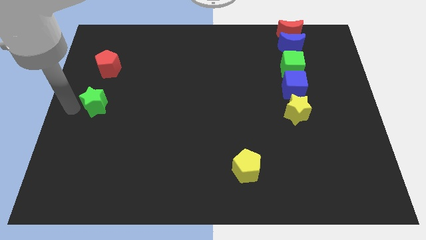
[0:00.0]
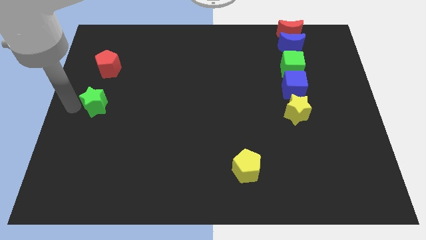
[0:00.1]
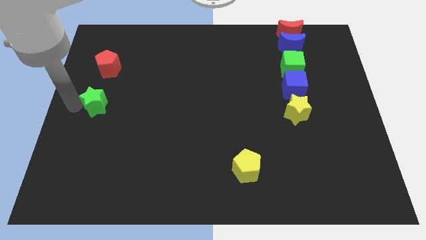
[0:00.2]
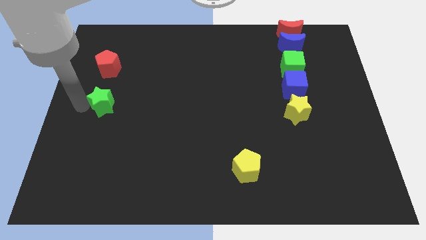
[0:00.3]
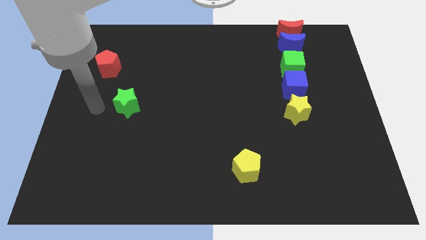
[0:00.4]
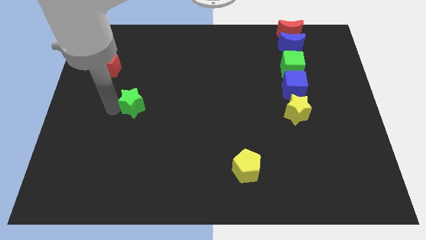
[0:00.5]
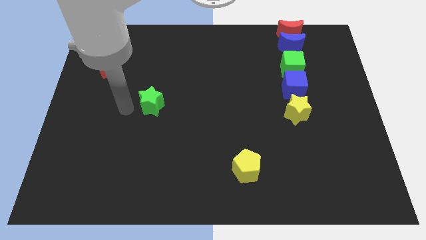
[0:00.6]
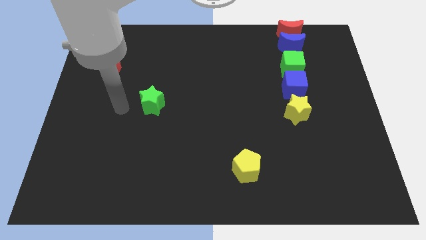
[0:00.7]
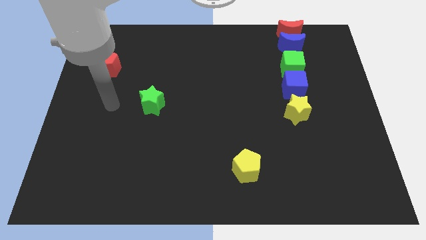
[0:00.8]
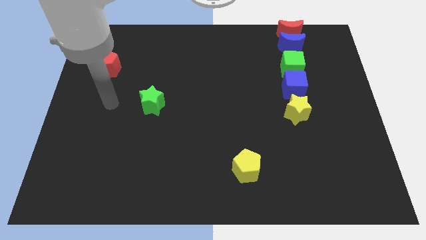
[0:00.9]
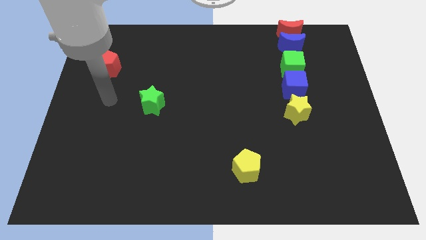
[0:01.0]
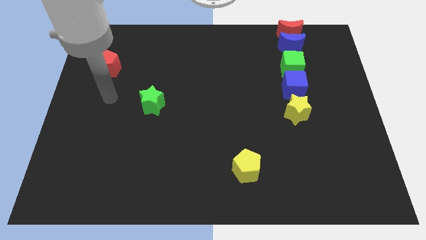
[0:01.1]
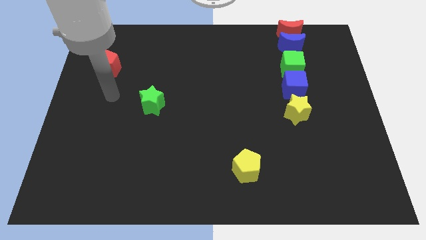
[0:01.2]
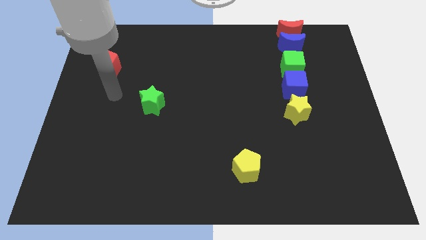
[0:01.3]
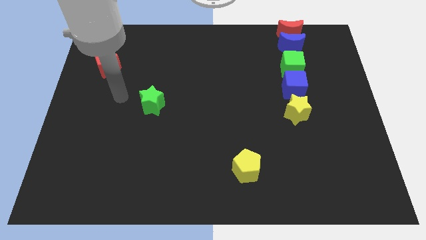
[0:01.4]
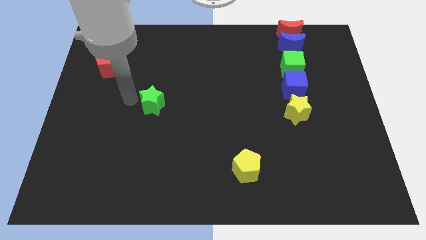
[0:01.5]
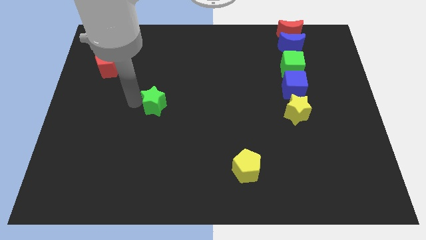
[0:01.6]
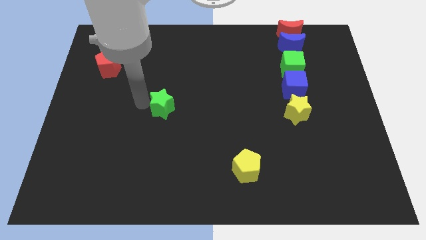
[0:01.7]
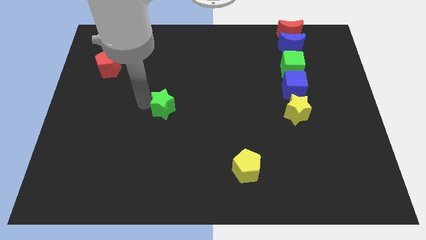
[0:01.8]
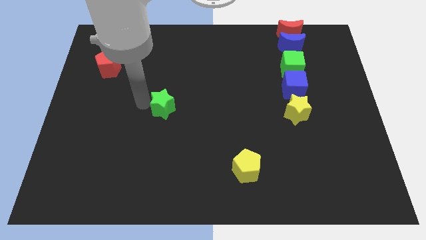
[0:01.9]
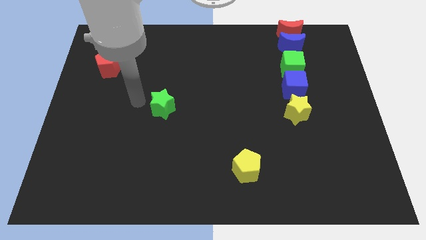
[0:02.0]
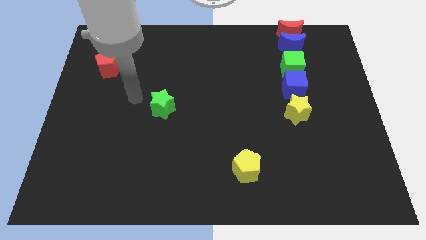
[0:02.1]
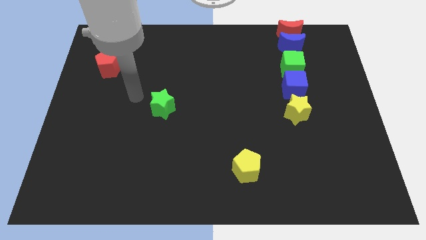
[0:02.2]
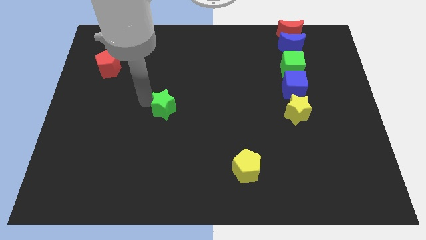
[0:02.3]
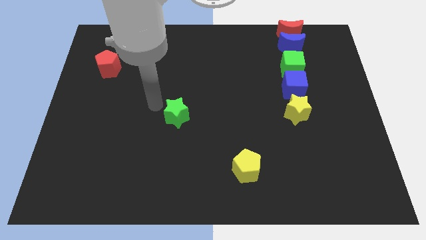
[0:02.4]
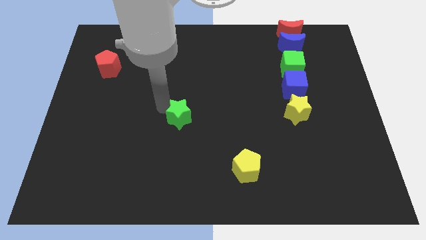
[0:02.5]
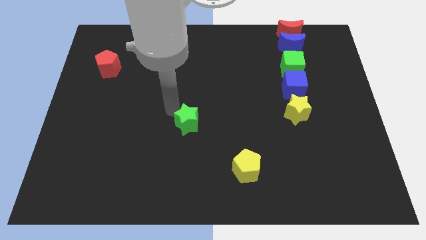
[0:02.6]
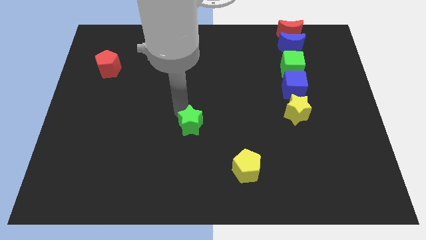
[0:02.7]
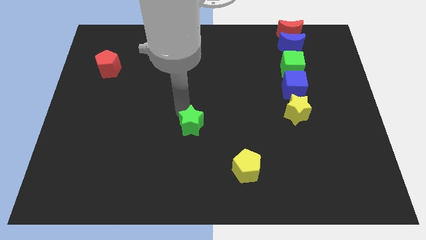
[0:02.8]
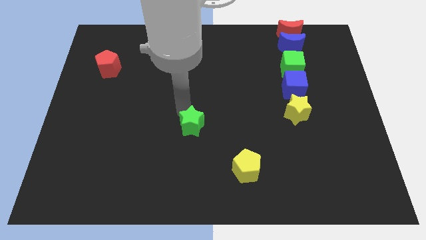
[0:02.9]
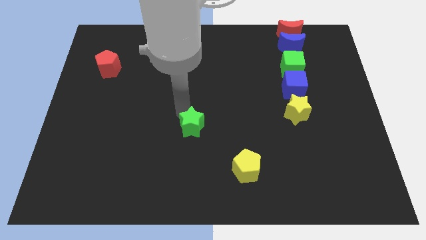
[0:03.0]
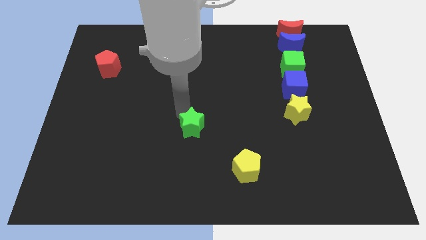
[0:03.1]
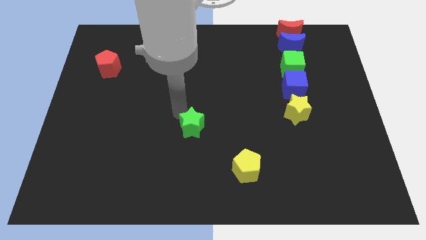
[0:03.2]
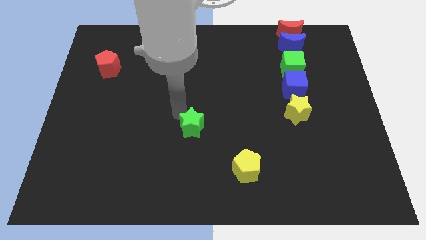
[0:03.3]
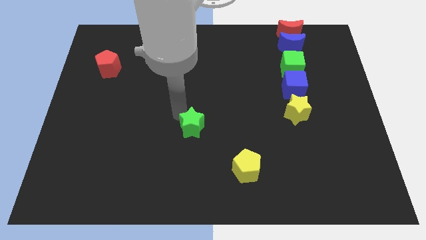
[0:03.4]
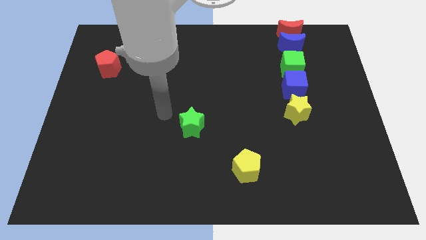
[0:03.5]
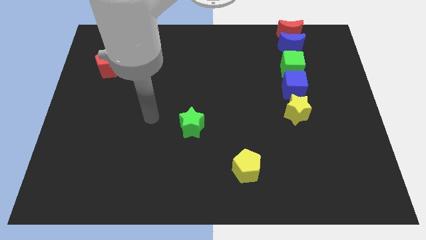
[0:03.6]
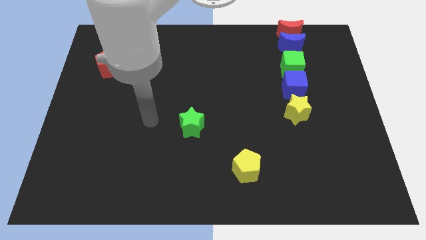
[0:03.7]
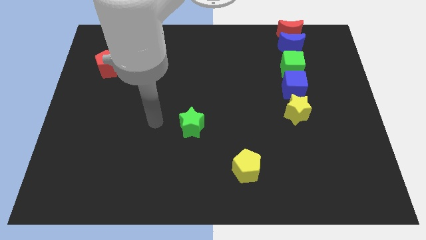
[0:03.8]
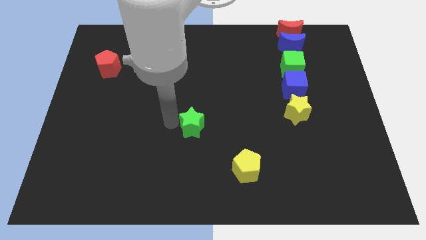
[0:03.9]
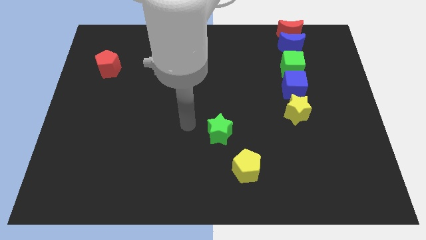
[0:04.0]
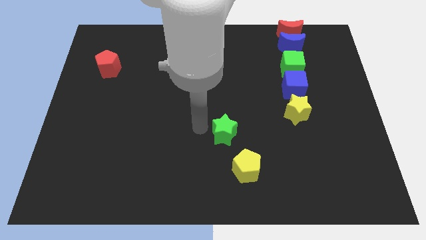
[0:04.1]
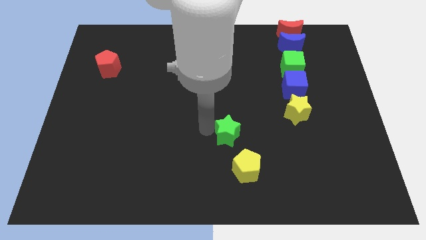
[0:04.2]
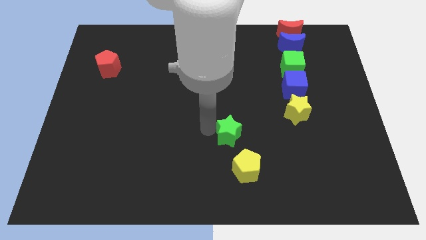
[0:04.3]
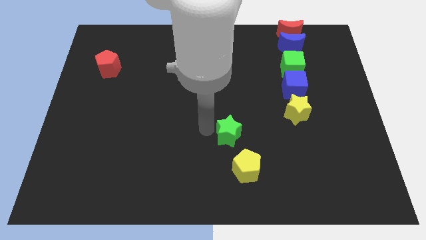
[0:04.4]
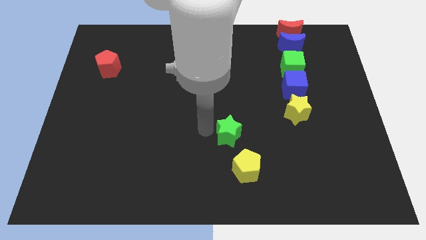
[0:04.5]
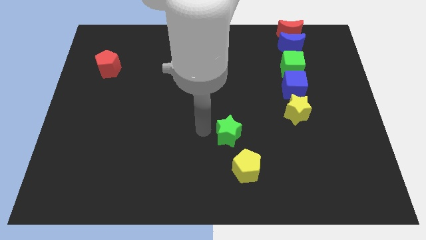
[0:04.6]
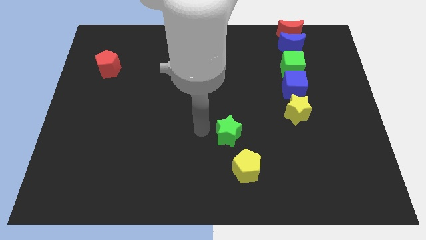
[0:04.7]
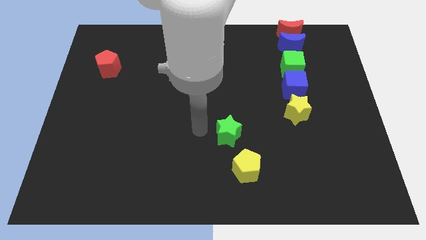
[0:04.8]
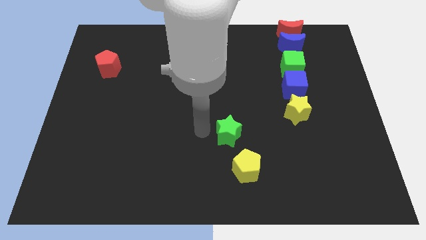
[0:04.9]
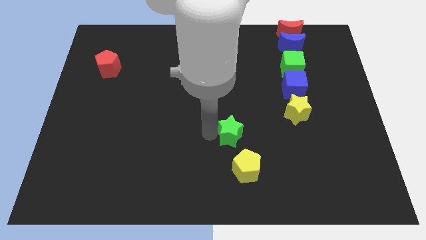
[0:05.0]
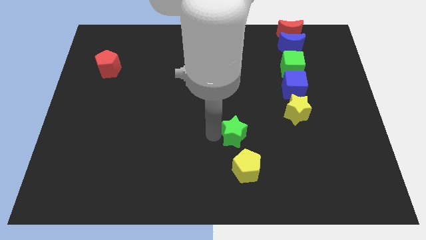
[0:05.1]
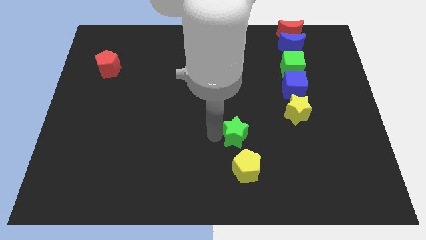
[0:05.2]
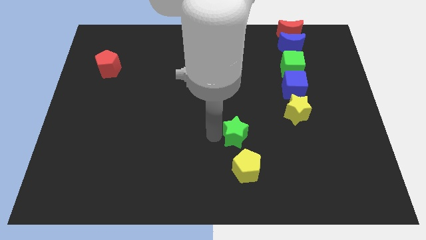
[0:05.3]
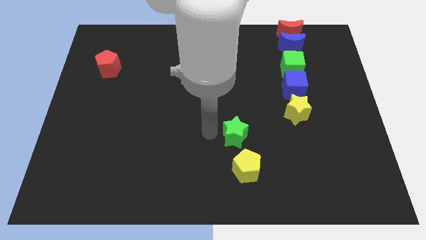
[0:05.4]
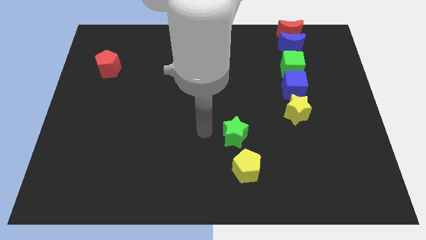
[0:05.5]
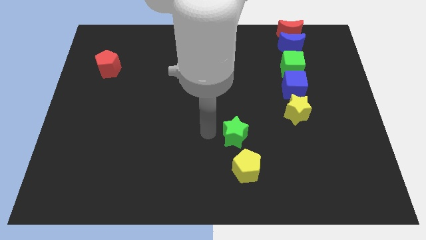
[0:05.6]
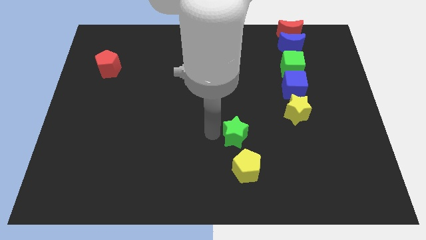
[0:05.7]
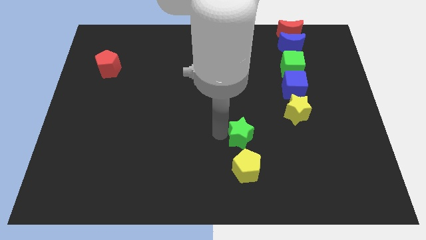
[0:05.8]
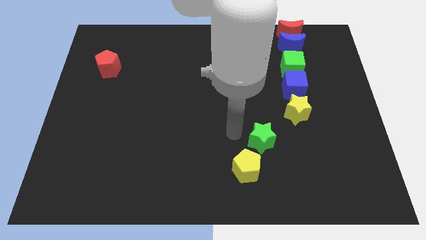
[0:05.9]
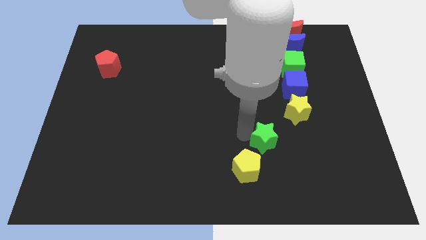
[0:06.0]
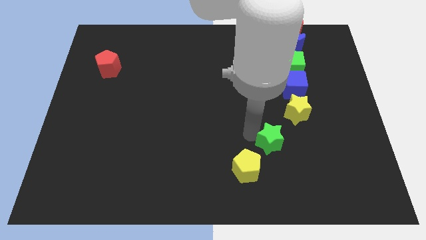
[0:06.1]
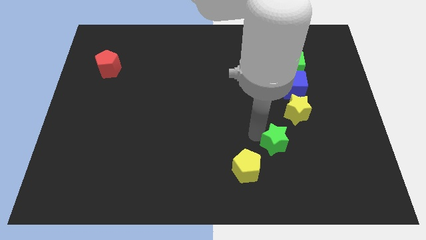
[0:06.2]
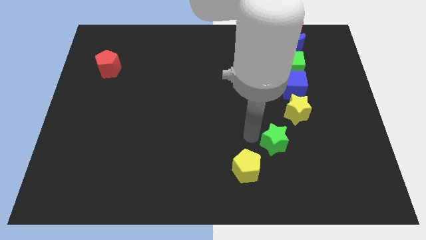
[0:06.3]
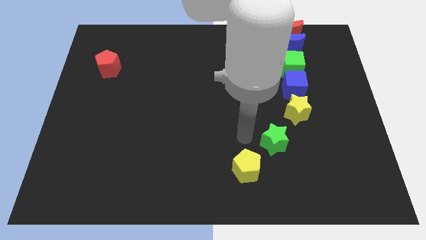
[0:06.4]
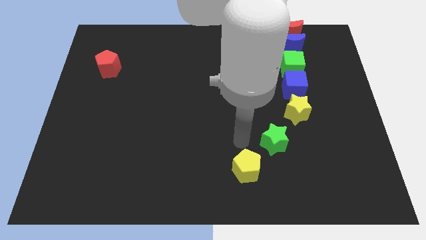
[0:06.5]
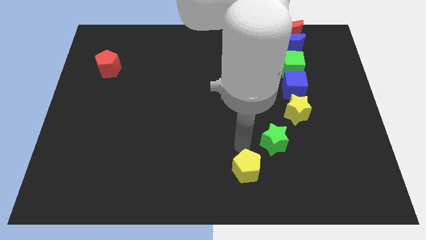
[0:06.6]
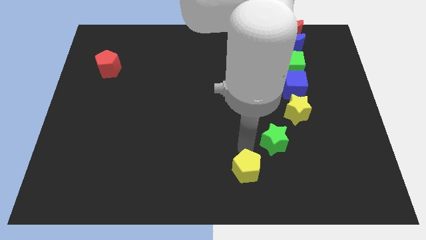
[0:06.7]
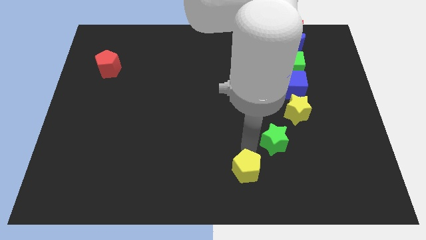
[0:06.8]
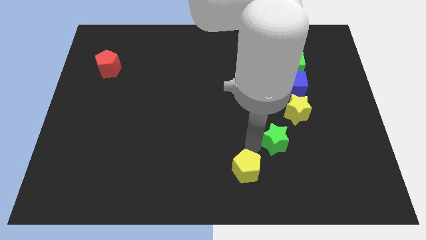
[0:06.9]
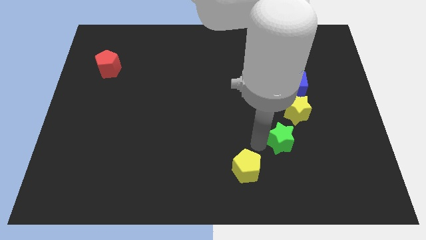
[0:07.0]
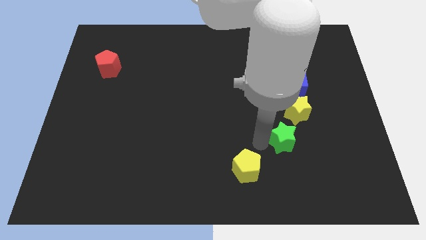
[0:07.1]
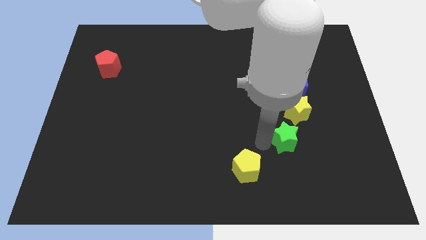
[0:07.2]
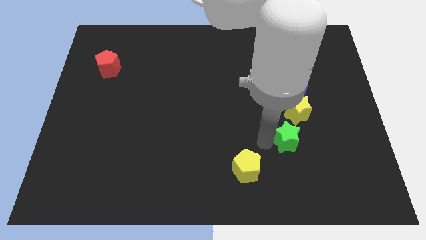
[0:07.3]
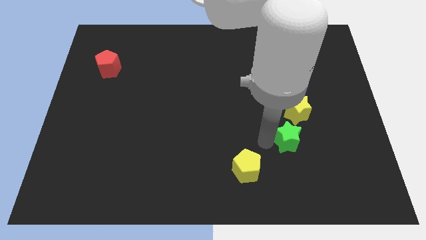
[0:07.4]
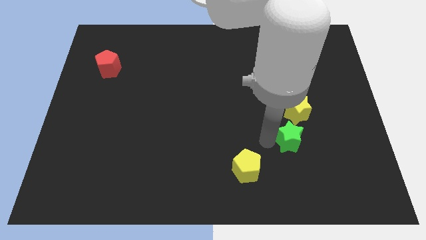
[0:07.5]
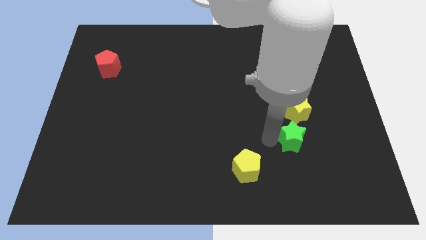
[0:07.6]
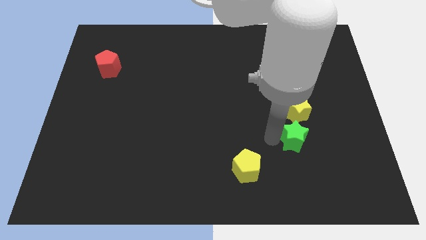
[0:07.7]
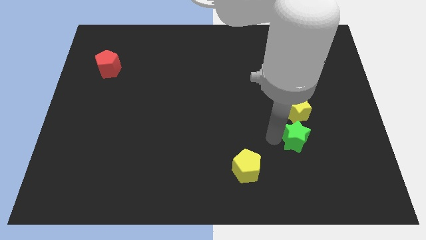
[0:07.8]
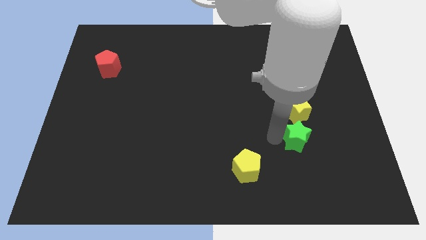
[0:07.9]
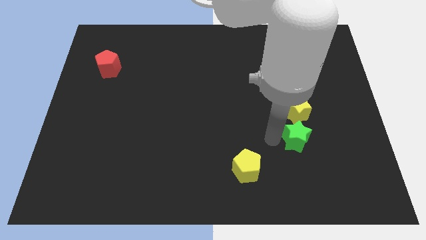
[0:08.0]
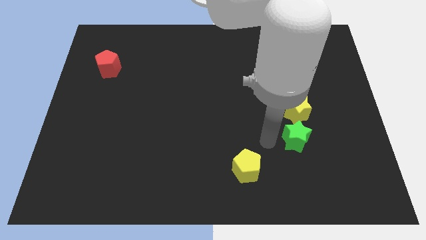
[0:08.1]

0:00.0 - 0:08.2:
push the green star near to the yellow star in the line

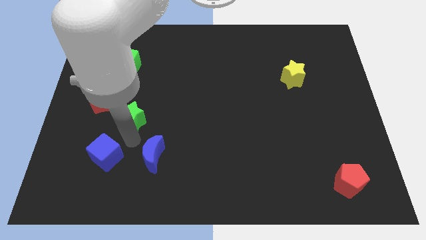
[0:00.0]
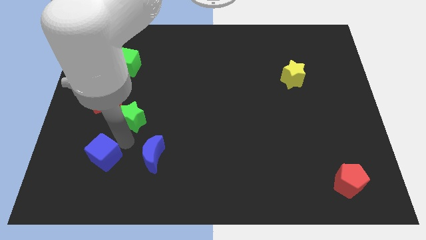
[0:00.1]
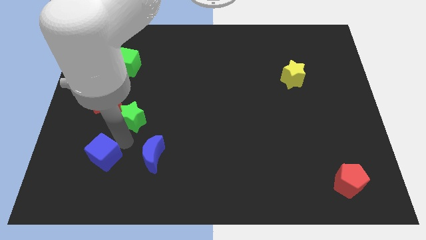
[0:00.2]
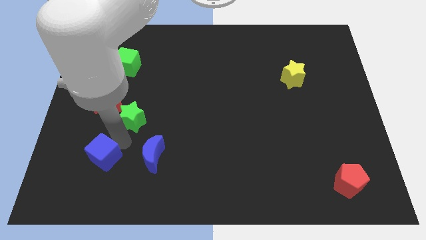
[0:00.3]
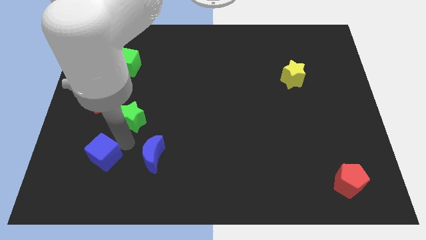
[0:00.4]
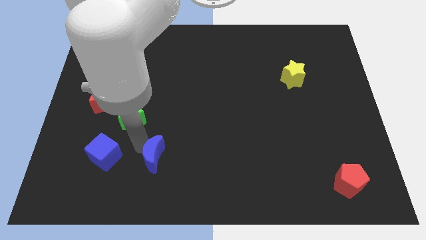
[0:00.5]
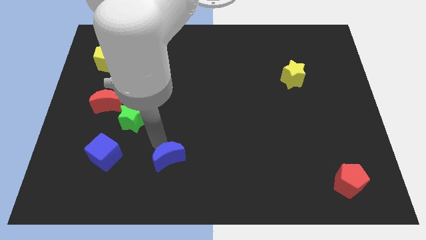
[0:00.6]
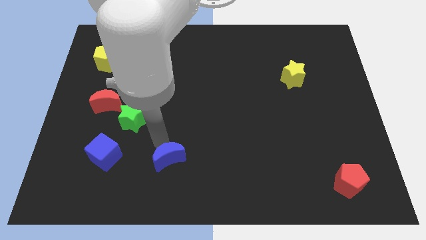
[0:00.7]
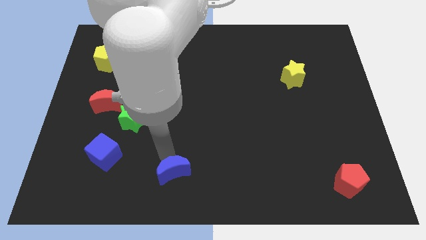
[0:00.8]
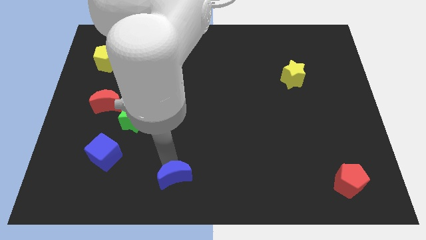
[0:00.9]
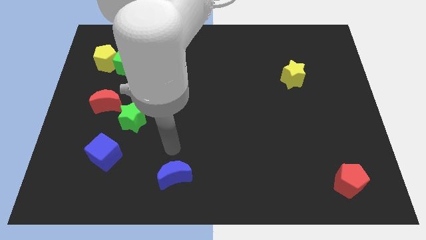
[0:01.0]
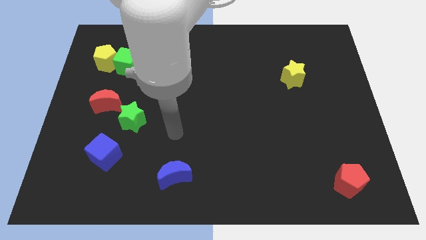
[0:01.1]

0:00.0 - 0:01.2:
move away the blue moon from the green star and blue cube
